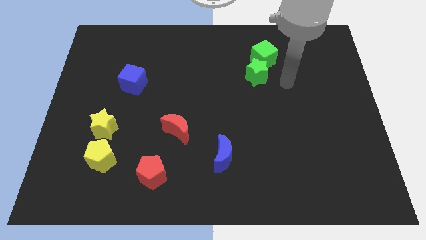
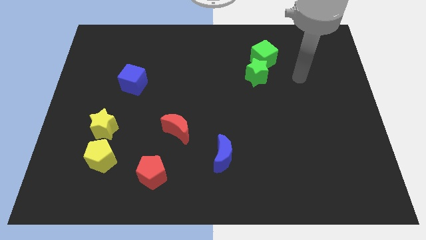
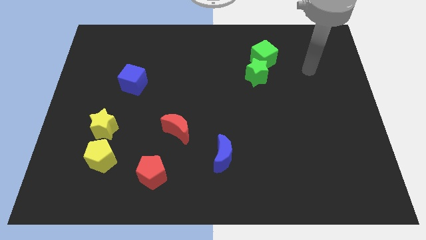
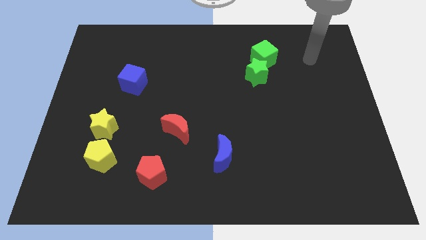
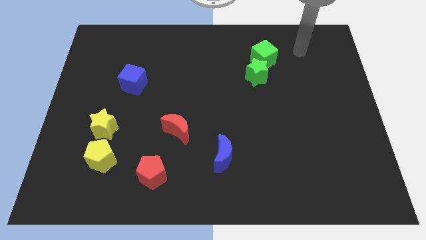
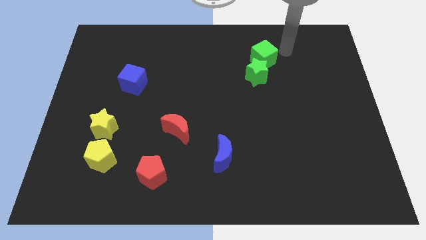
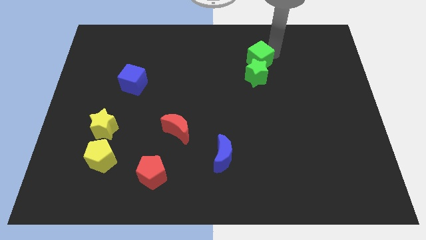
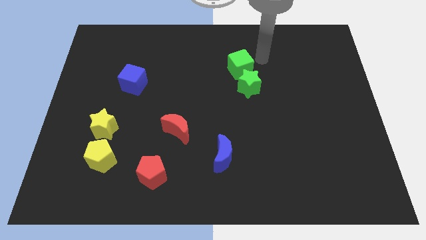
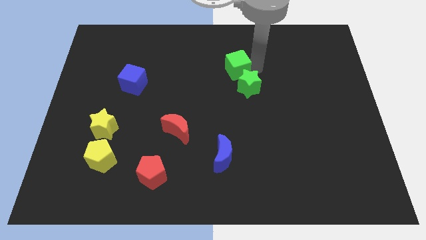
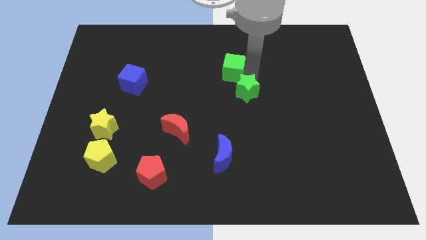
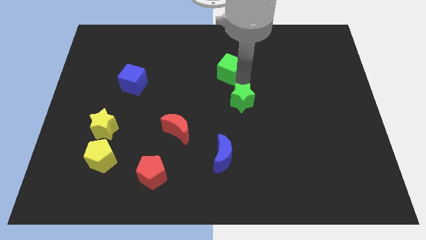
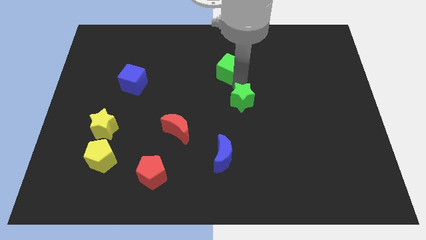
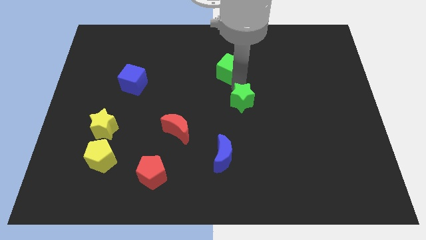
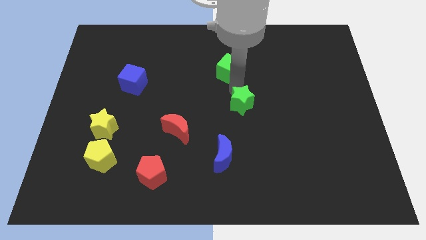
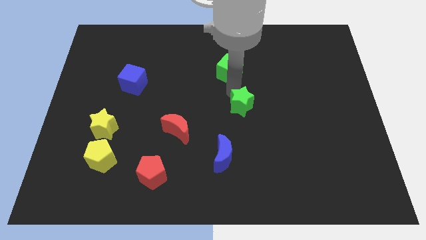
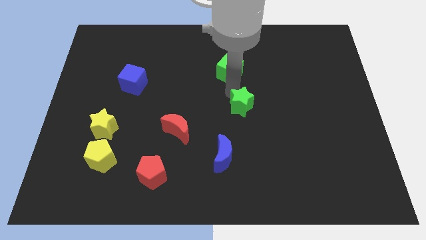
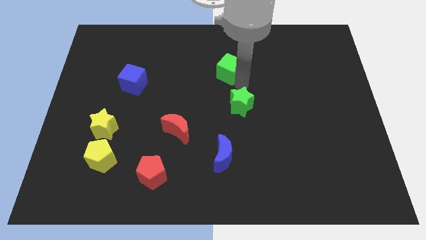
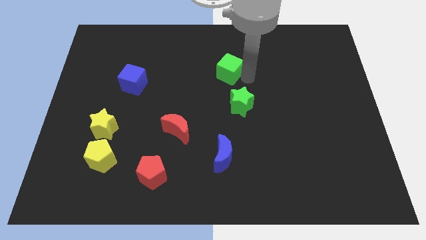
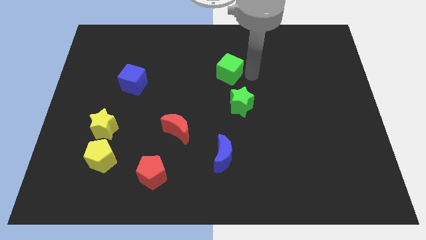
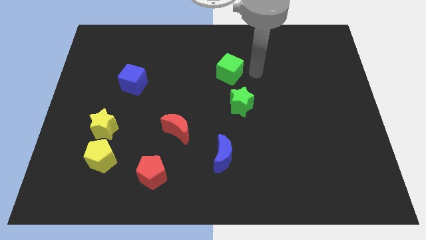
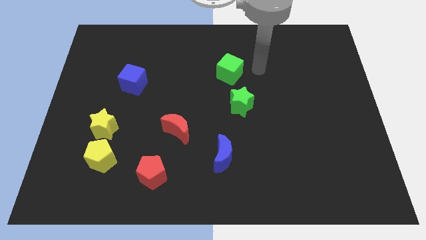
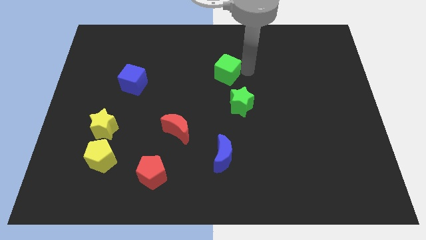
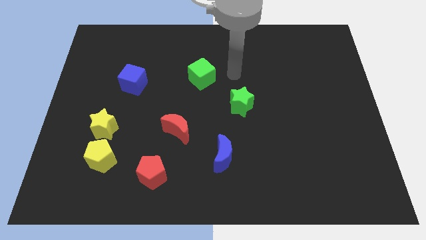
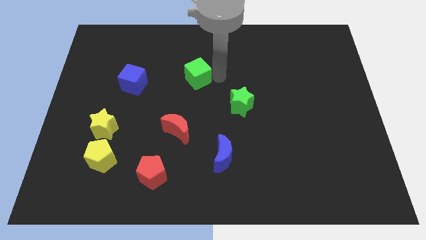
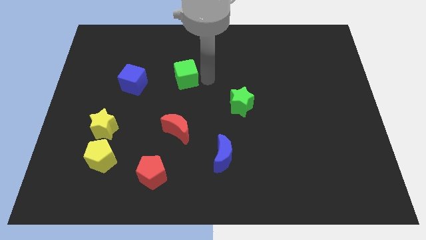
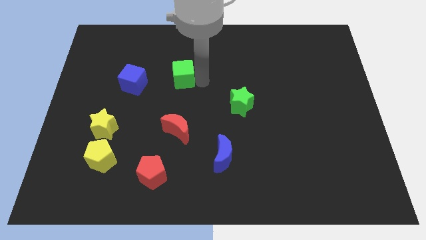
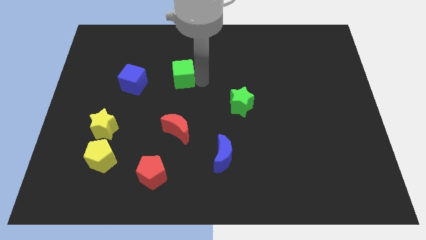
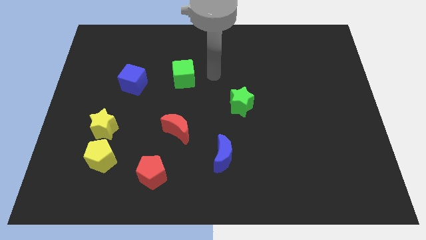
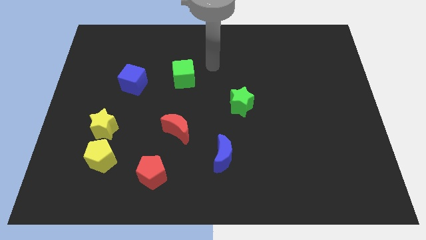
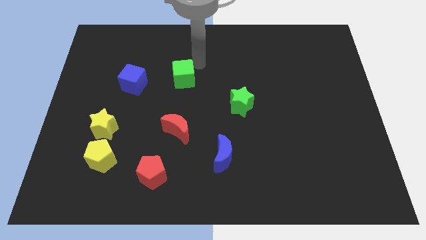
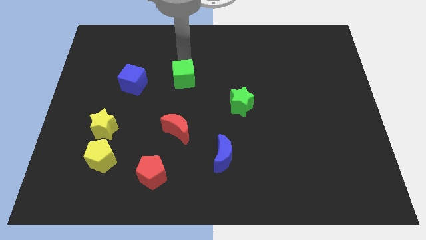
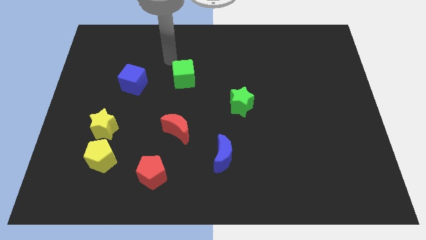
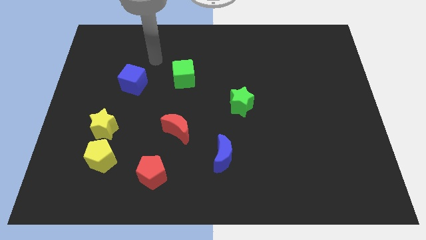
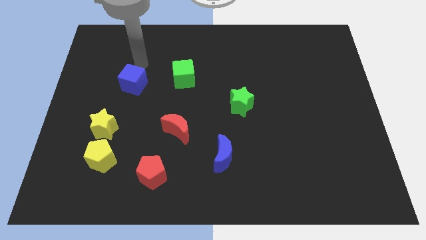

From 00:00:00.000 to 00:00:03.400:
push the green cube to the right of the blue cube

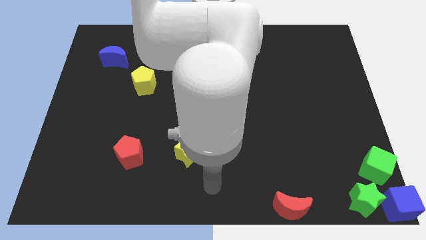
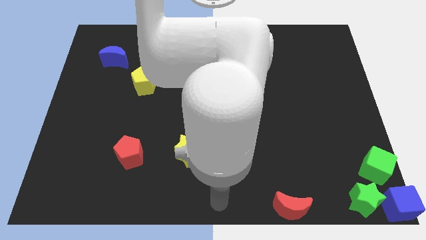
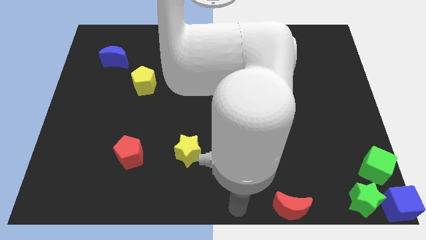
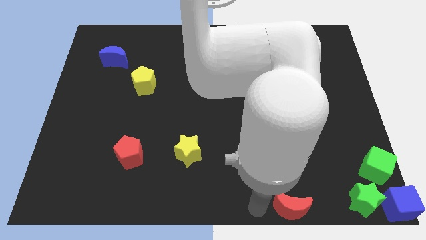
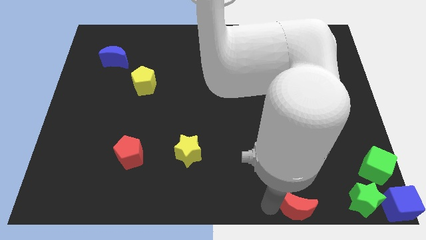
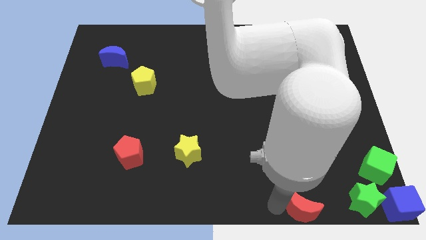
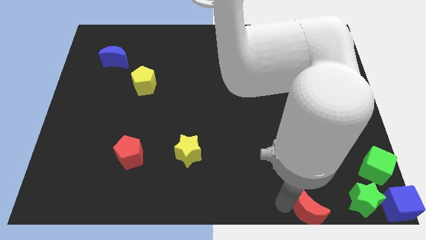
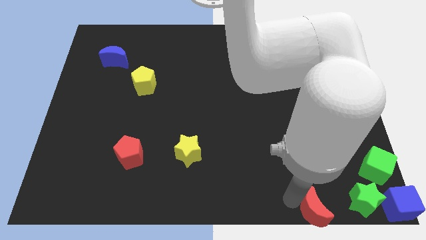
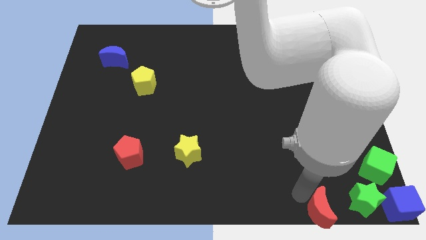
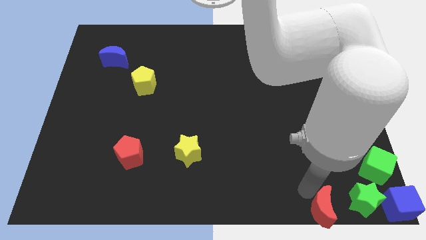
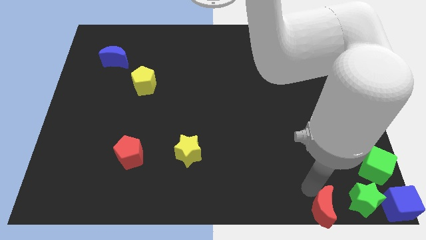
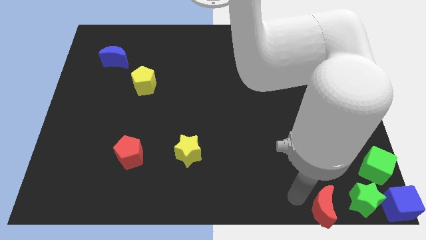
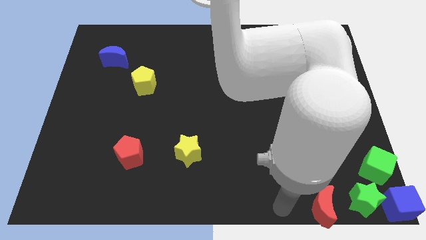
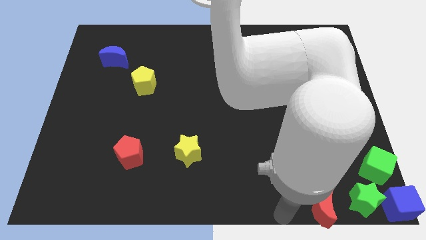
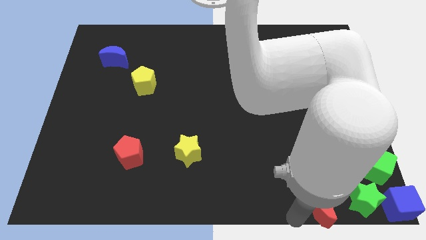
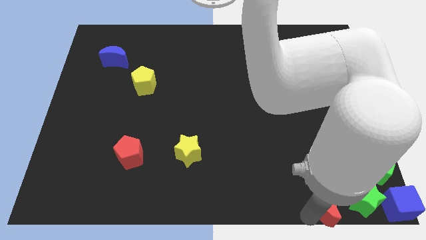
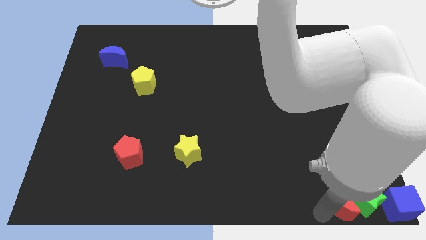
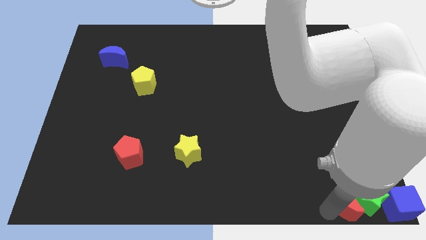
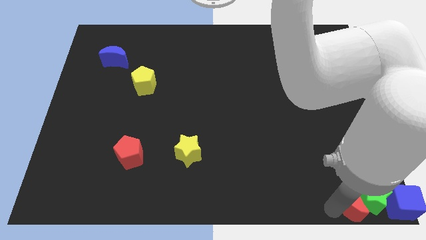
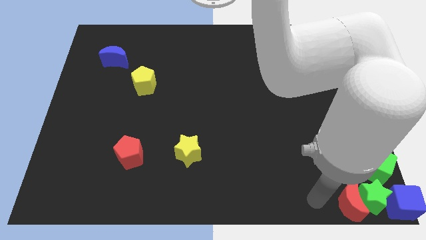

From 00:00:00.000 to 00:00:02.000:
push the red crescent into the green star

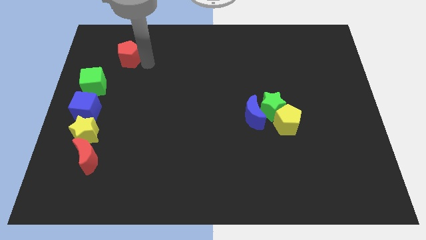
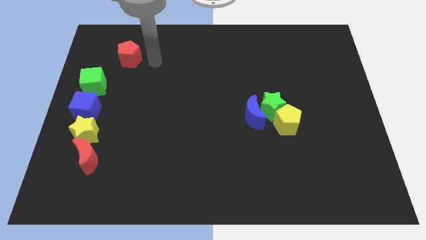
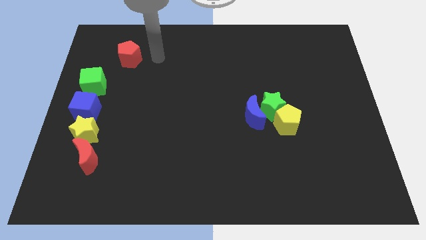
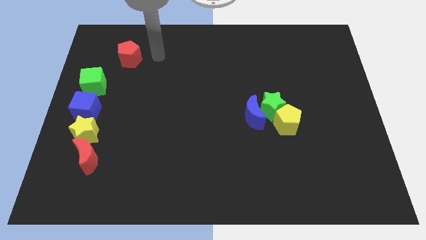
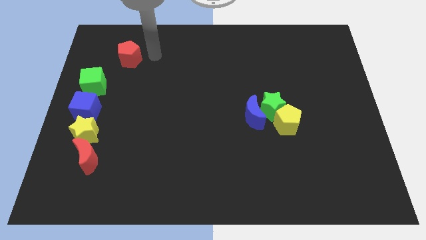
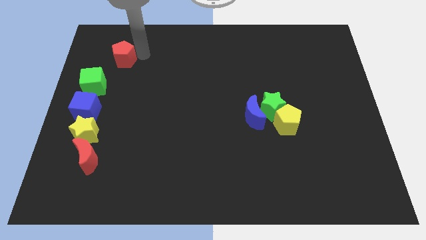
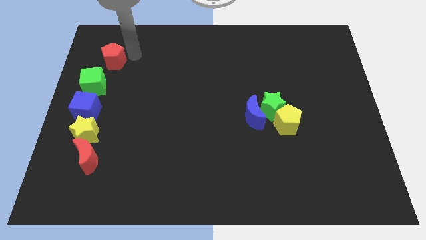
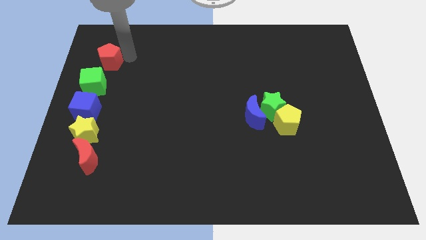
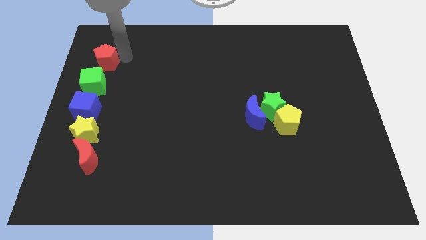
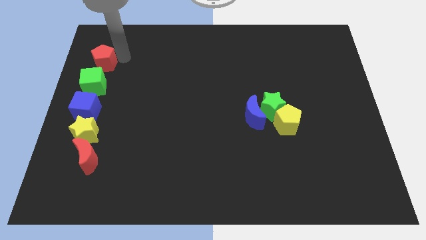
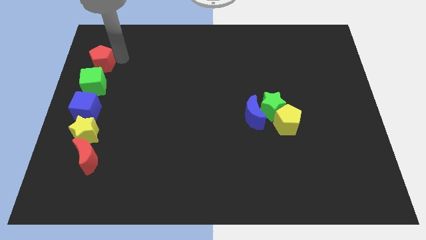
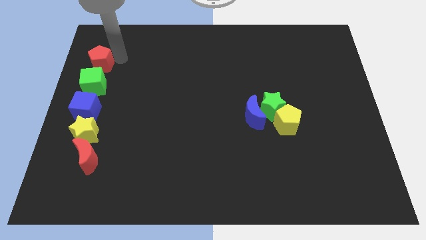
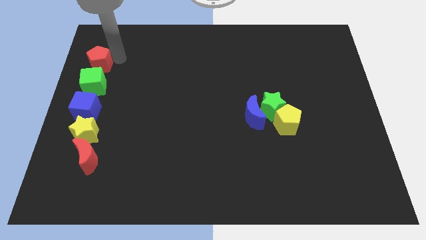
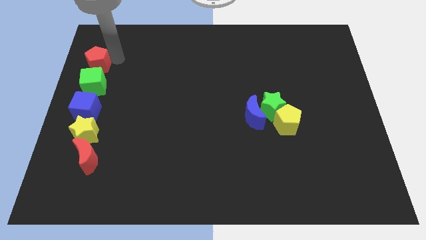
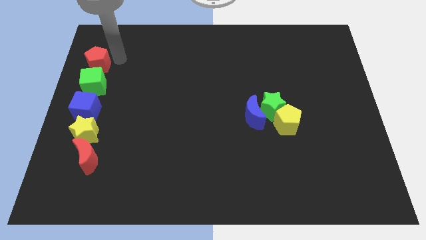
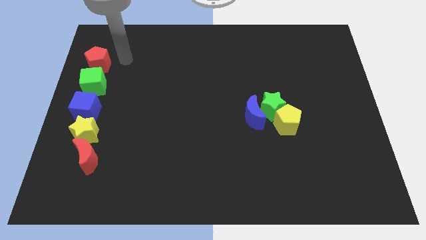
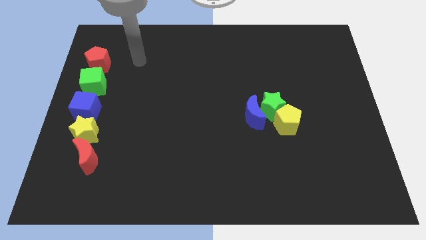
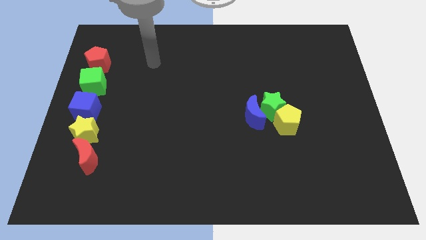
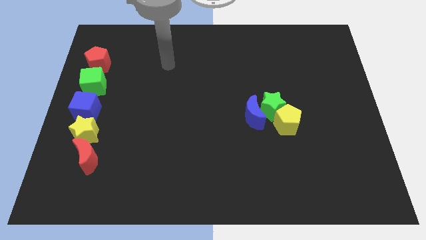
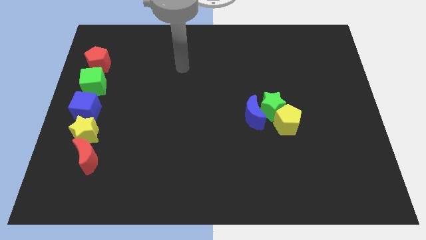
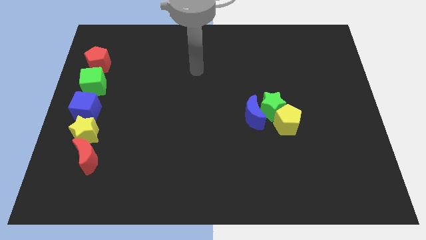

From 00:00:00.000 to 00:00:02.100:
slide the red pentagon to the top of the green cube

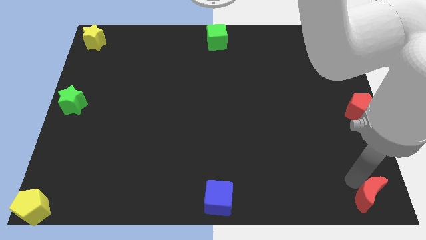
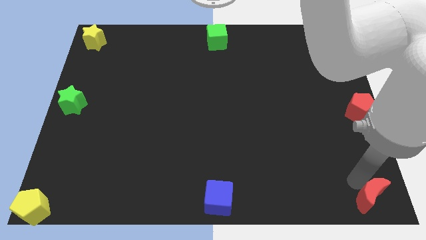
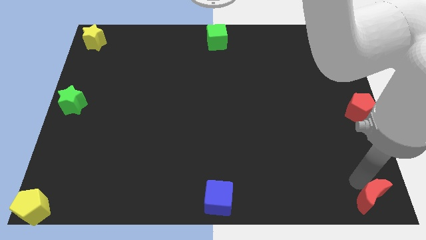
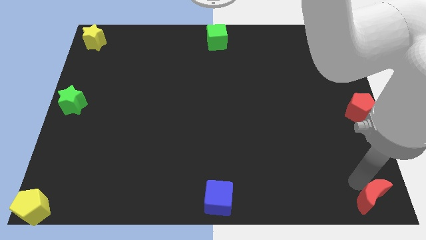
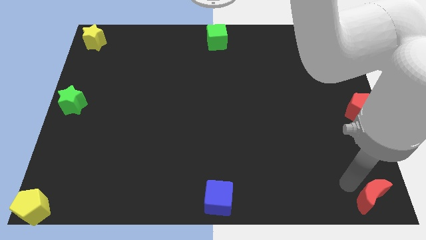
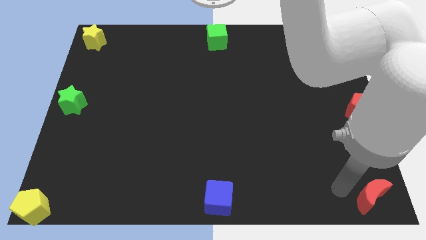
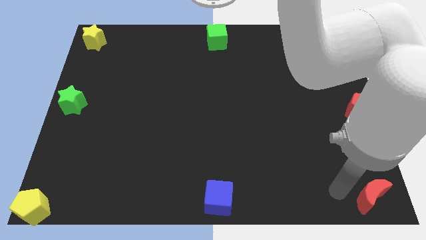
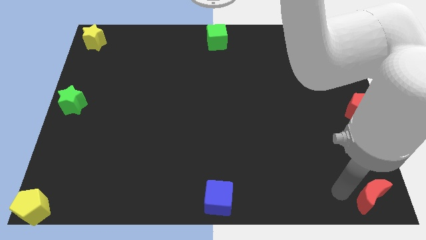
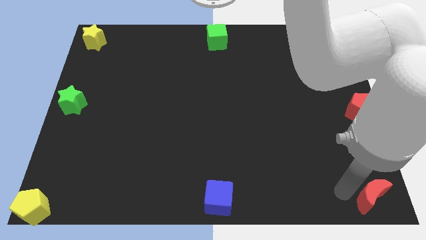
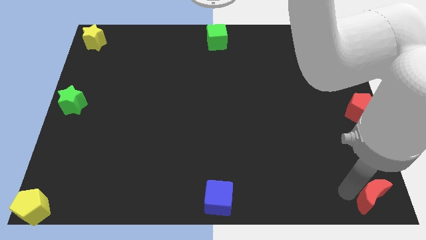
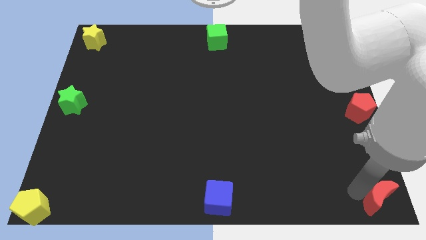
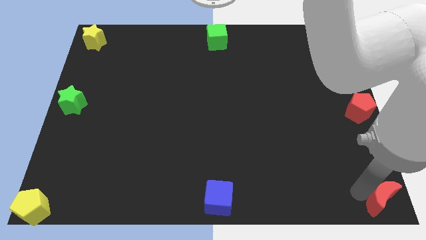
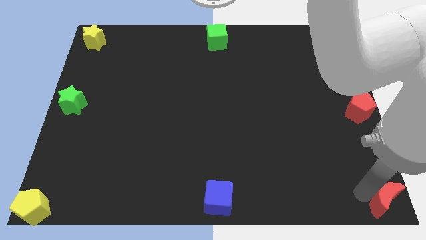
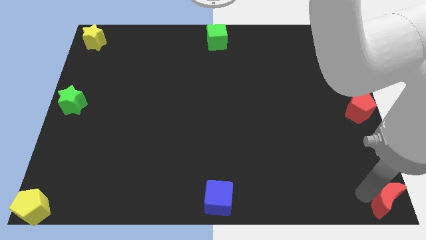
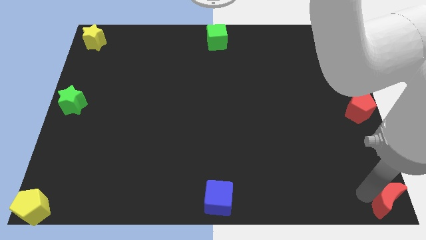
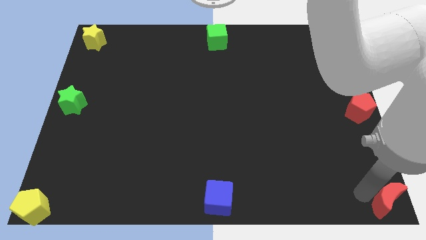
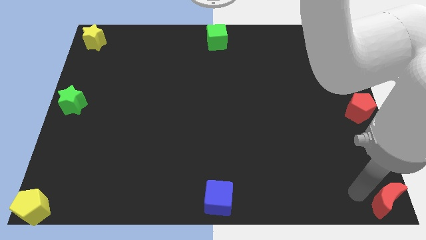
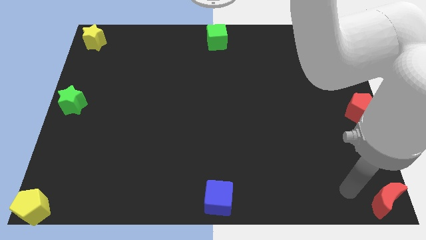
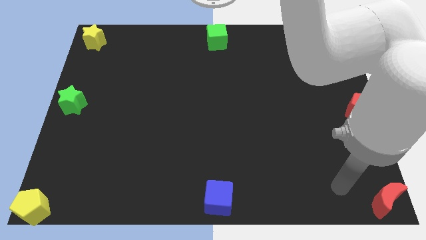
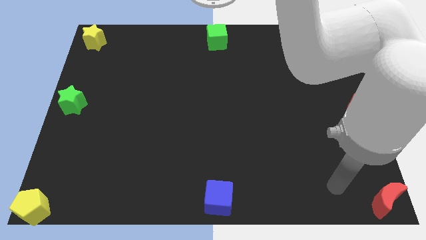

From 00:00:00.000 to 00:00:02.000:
place the red moon at the bottom right corner of the board
